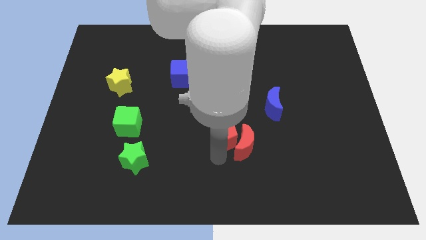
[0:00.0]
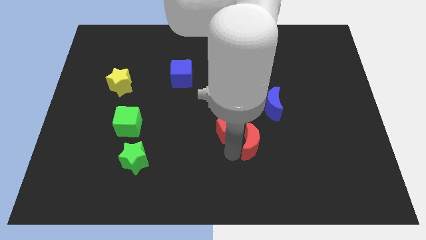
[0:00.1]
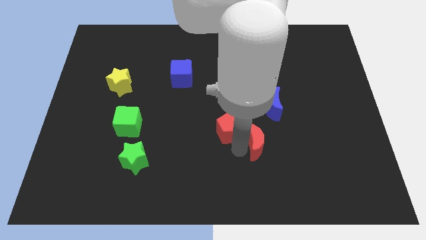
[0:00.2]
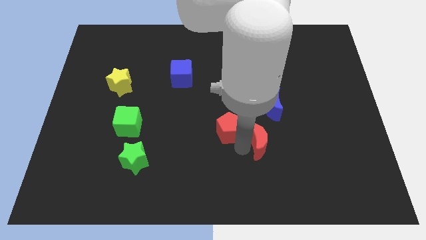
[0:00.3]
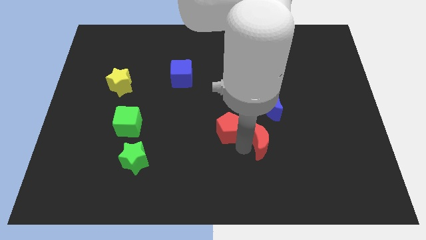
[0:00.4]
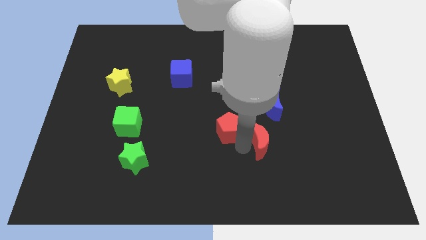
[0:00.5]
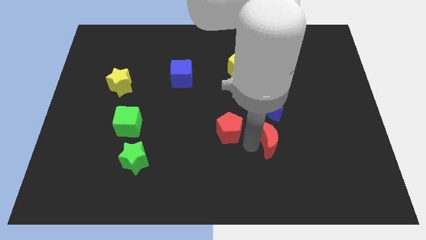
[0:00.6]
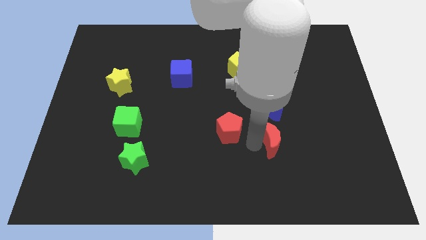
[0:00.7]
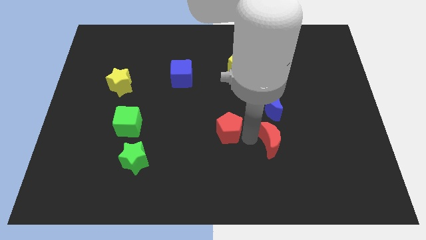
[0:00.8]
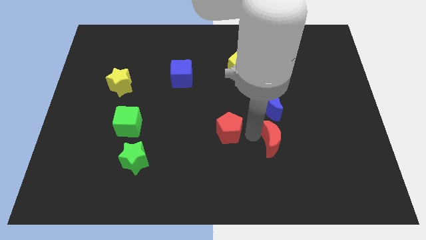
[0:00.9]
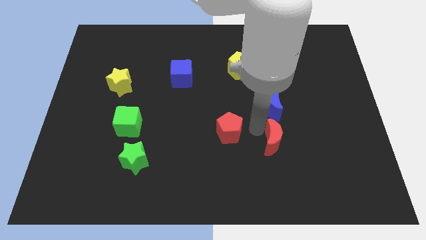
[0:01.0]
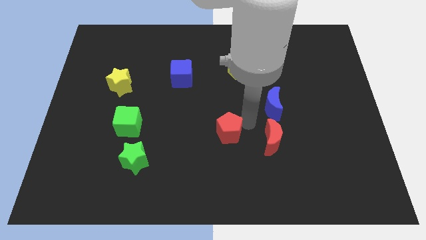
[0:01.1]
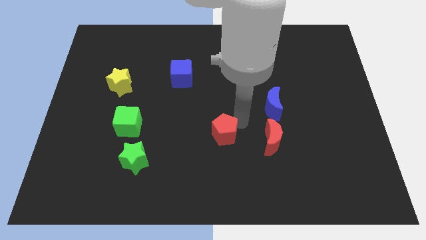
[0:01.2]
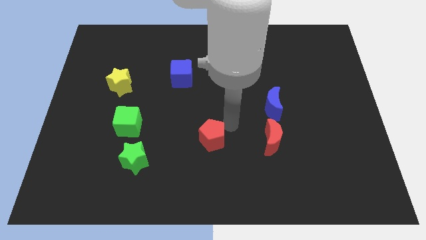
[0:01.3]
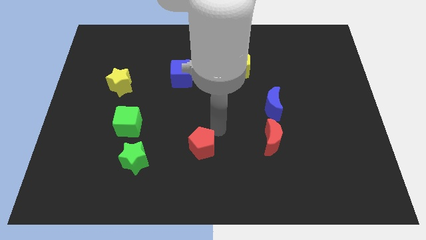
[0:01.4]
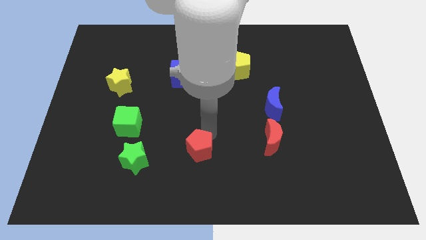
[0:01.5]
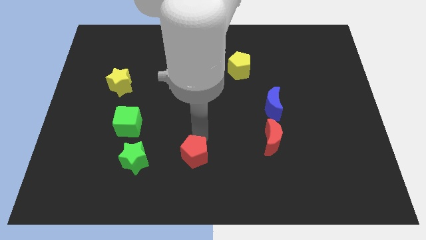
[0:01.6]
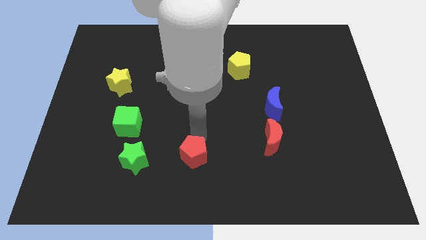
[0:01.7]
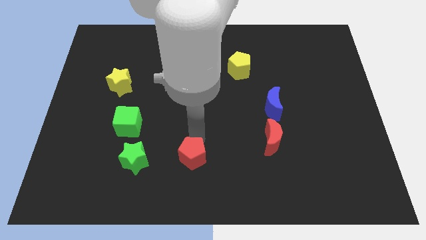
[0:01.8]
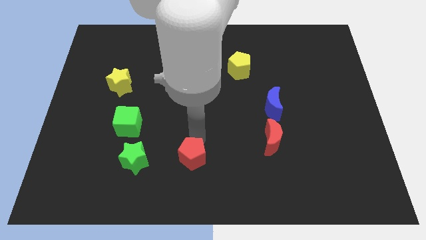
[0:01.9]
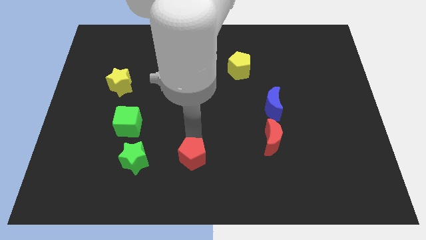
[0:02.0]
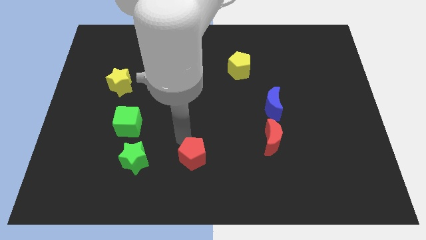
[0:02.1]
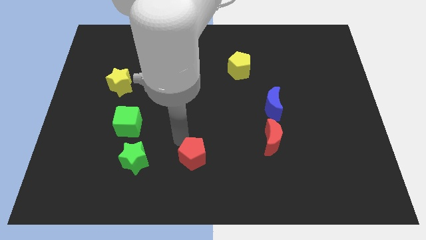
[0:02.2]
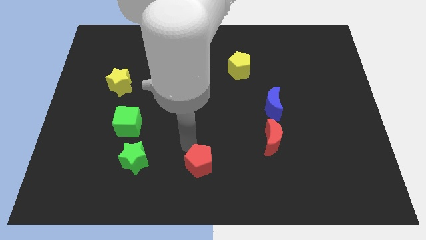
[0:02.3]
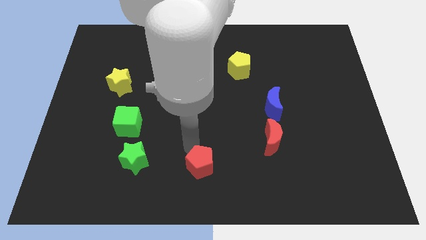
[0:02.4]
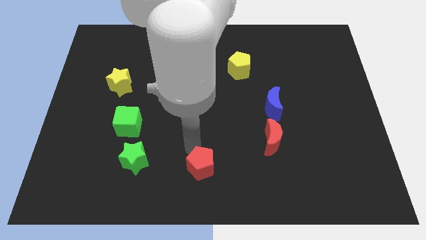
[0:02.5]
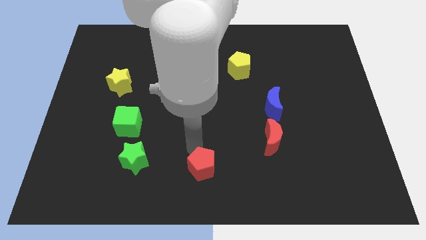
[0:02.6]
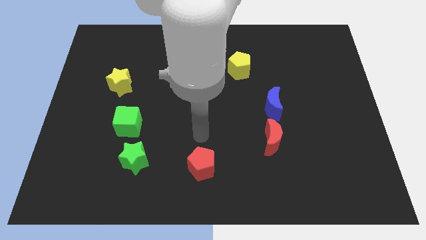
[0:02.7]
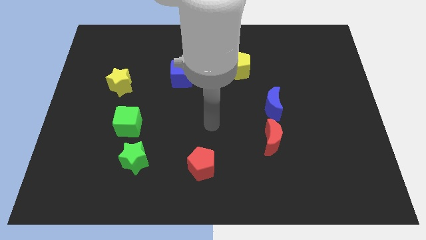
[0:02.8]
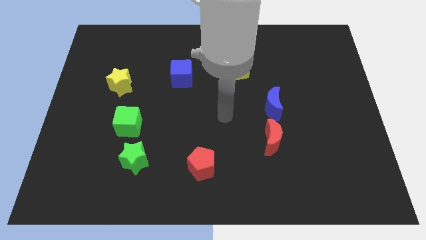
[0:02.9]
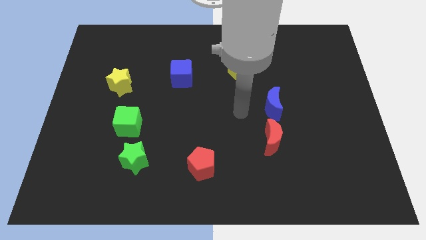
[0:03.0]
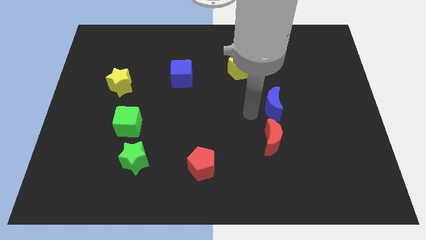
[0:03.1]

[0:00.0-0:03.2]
separate the red crescent and red pentagon

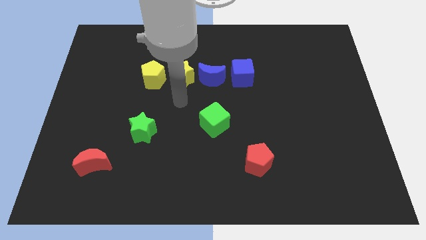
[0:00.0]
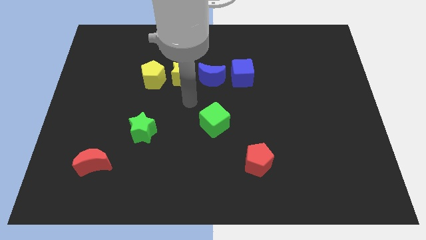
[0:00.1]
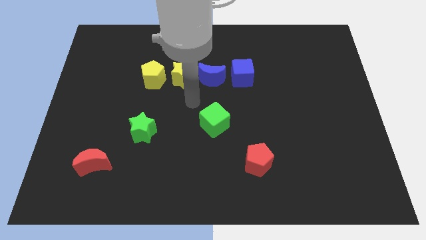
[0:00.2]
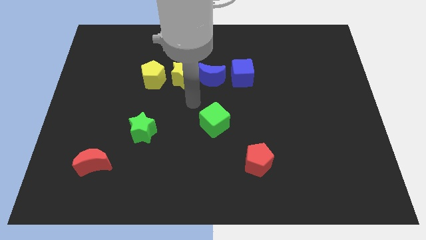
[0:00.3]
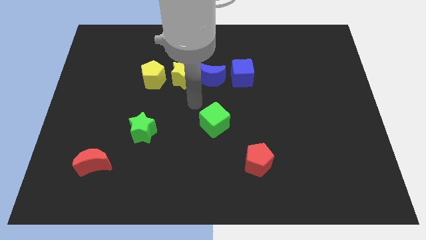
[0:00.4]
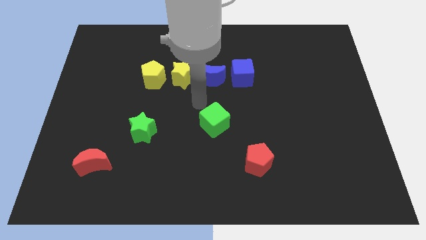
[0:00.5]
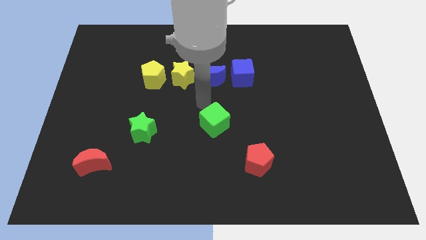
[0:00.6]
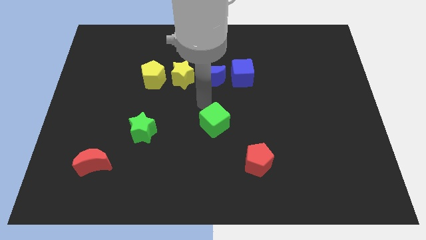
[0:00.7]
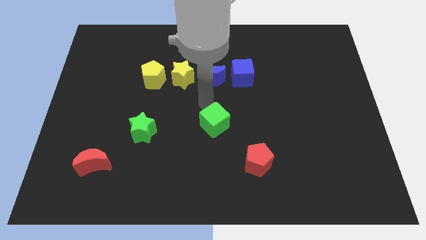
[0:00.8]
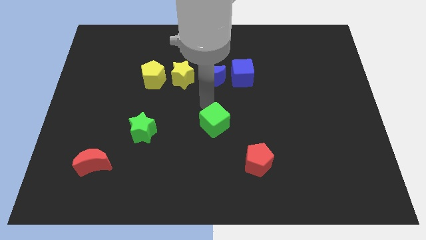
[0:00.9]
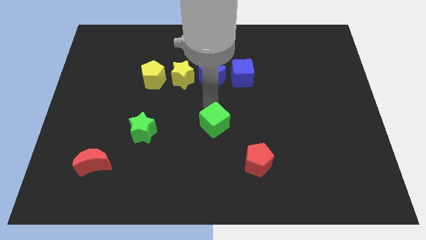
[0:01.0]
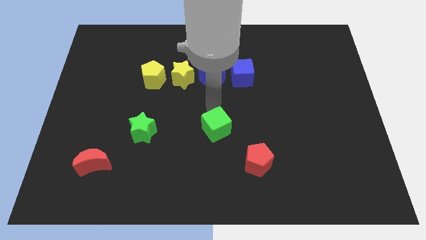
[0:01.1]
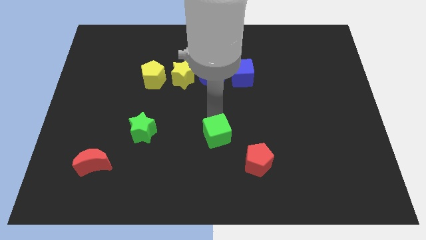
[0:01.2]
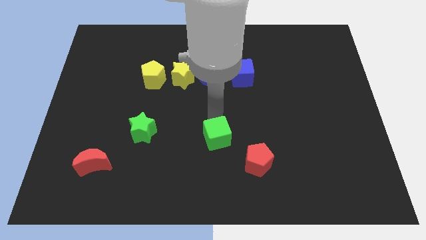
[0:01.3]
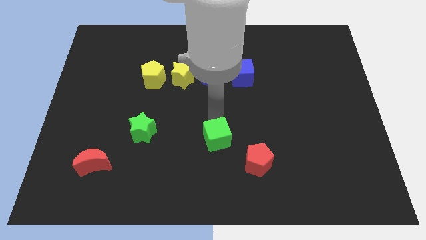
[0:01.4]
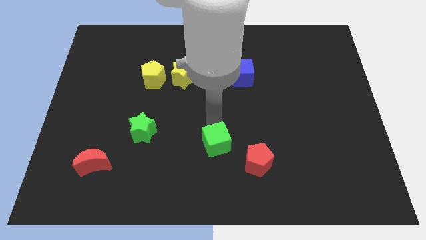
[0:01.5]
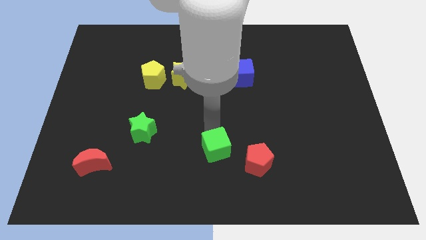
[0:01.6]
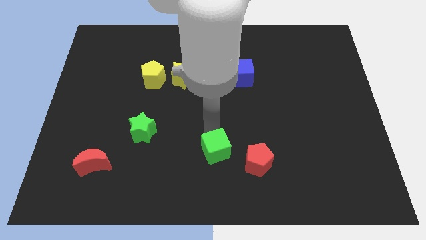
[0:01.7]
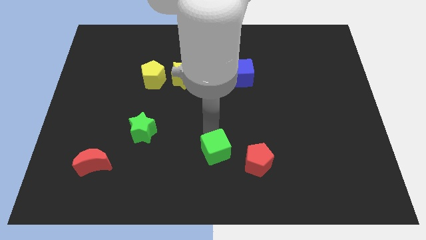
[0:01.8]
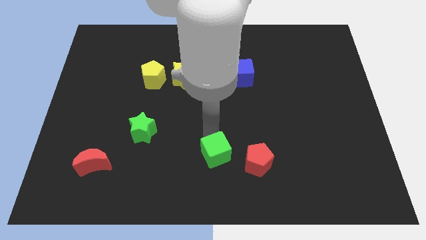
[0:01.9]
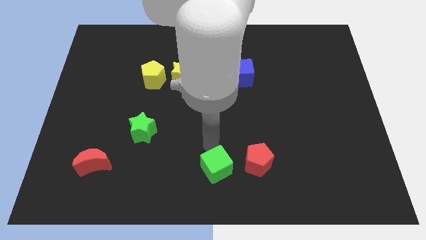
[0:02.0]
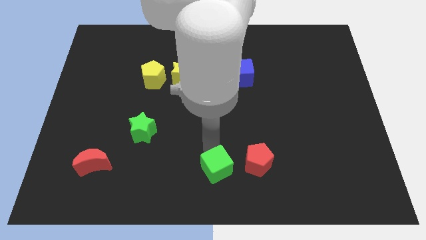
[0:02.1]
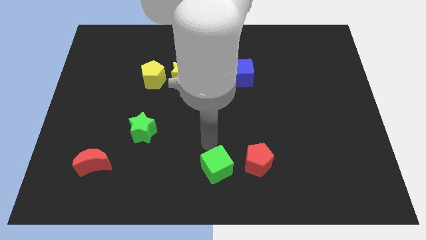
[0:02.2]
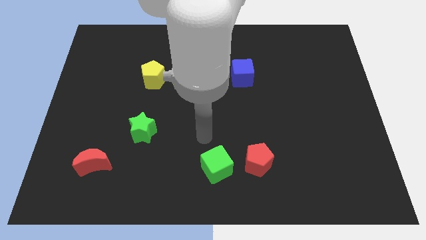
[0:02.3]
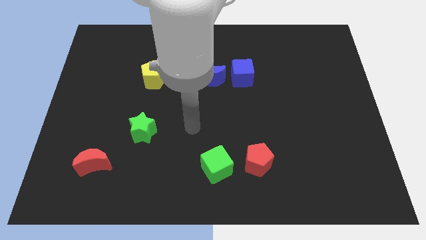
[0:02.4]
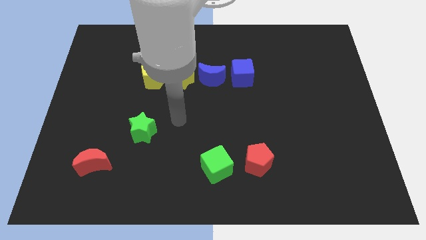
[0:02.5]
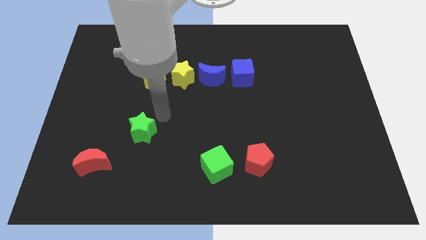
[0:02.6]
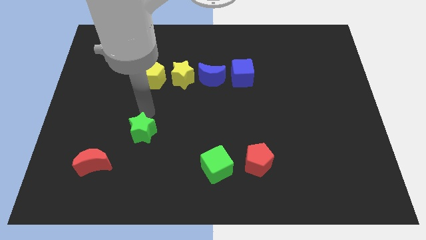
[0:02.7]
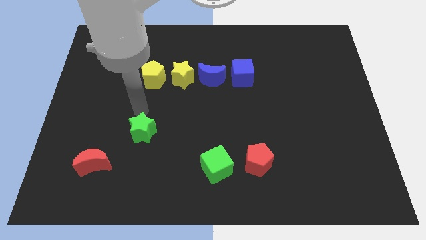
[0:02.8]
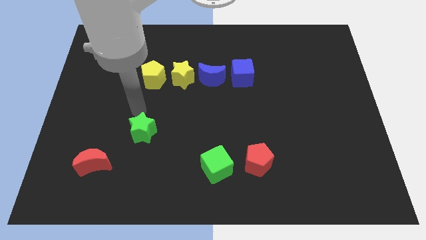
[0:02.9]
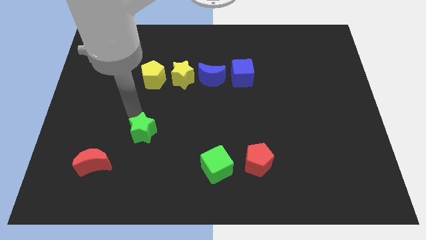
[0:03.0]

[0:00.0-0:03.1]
push green cube to the left of red pentagon

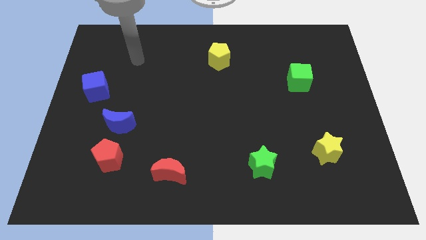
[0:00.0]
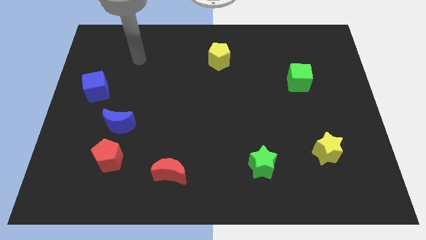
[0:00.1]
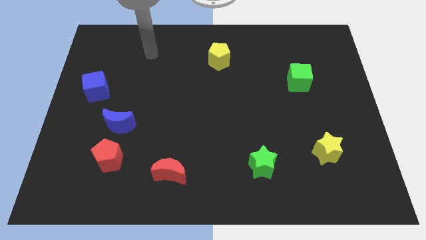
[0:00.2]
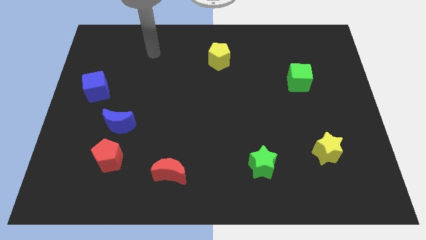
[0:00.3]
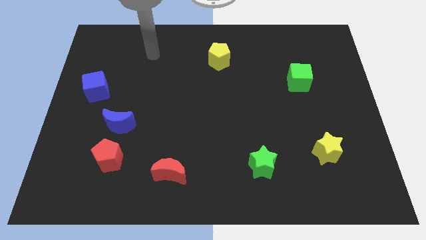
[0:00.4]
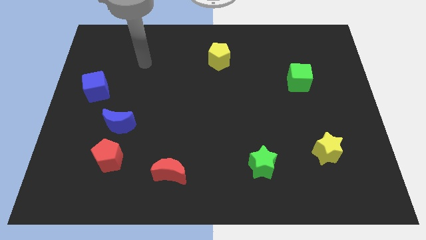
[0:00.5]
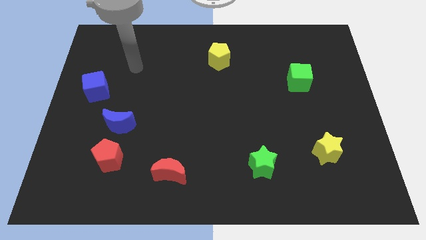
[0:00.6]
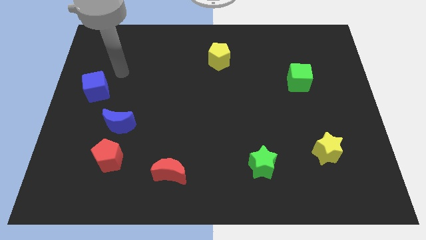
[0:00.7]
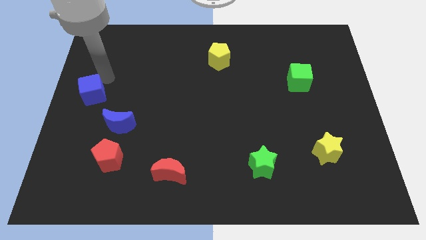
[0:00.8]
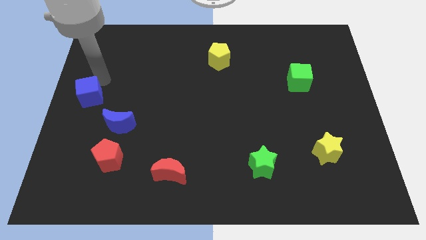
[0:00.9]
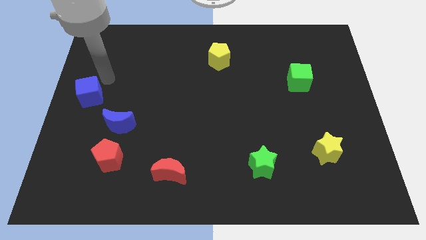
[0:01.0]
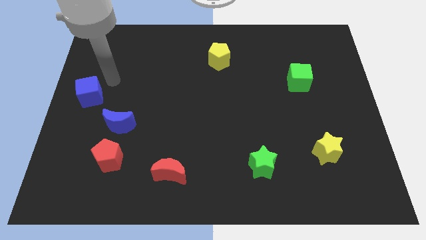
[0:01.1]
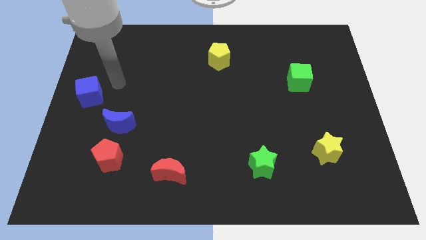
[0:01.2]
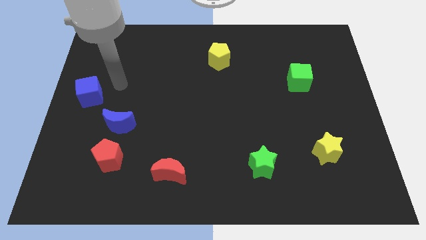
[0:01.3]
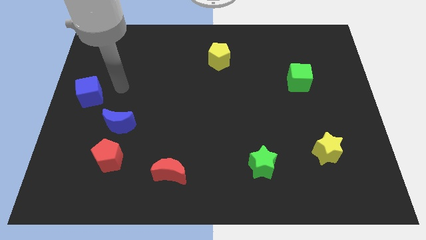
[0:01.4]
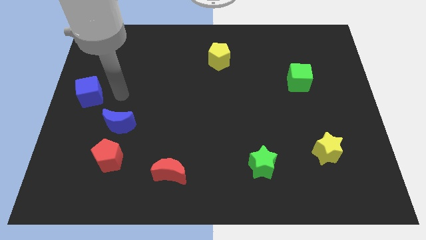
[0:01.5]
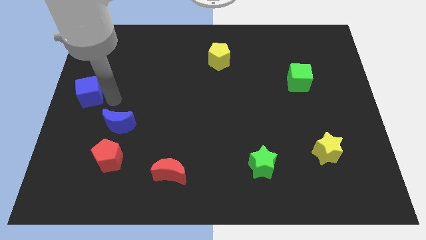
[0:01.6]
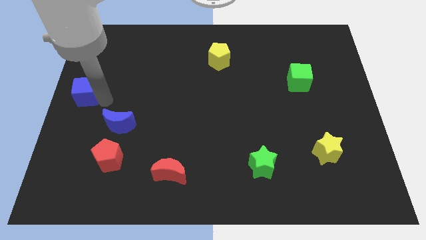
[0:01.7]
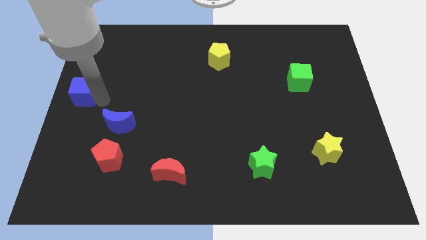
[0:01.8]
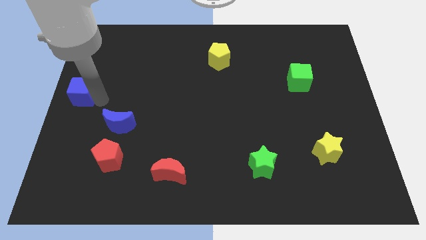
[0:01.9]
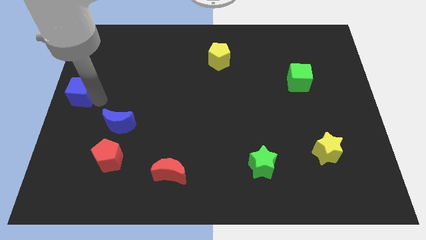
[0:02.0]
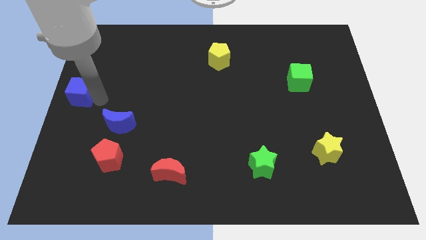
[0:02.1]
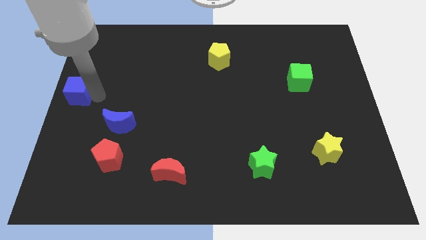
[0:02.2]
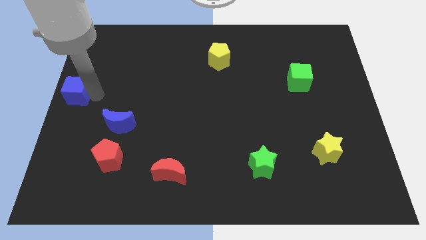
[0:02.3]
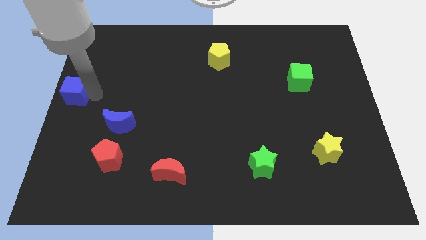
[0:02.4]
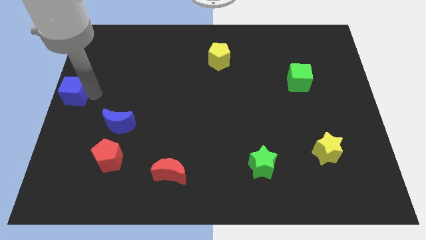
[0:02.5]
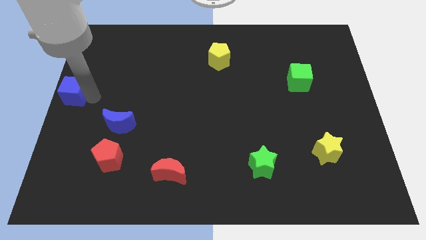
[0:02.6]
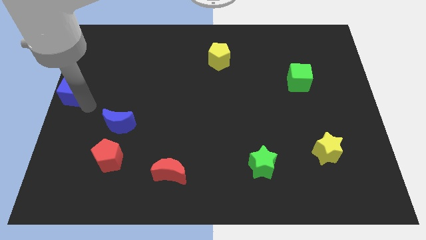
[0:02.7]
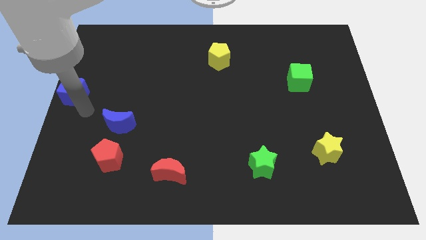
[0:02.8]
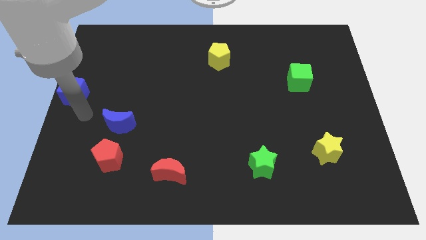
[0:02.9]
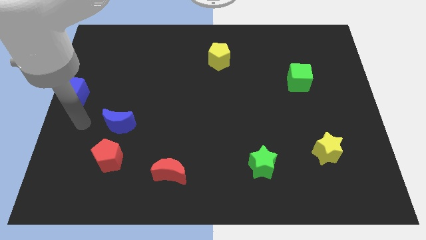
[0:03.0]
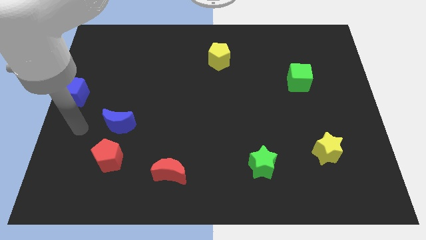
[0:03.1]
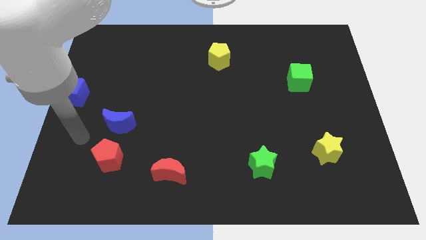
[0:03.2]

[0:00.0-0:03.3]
push the blue cube to the center left of the board
